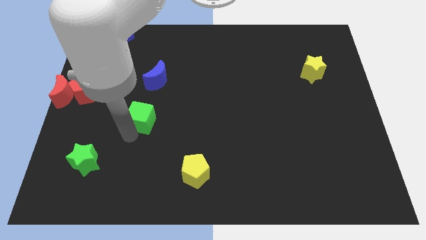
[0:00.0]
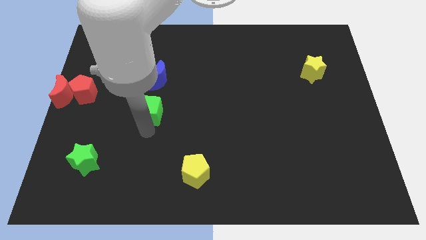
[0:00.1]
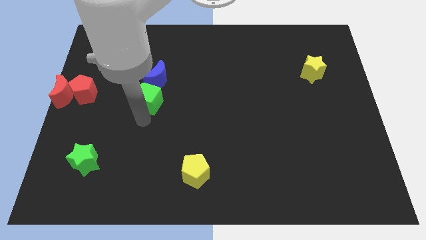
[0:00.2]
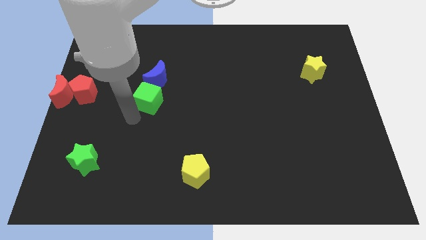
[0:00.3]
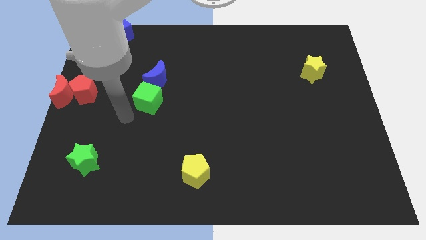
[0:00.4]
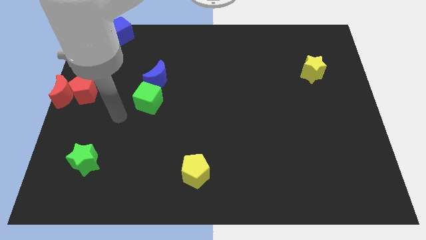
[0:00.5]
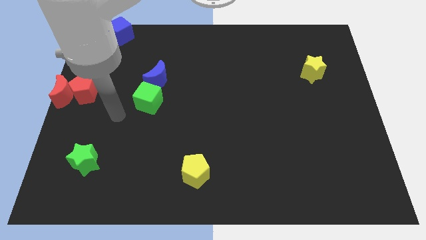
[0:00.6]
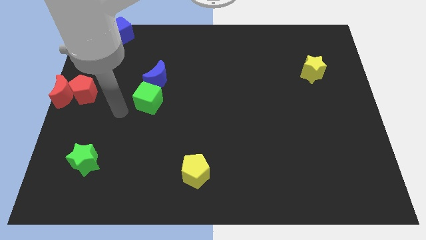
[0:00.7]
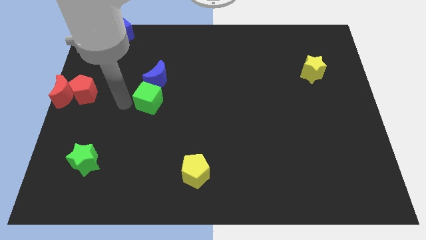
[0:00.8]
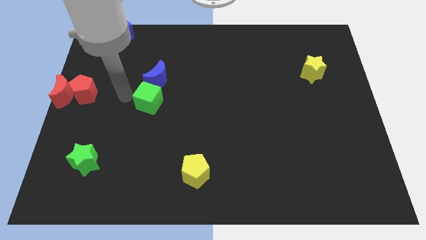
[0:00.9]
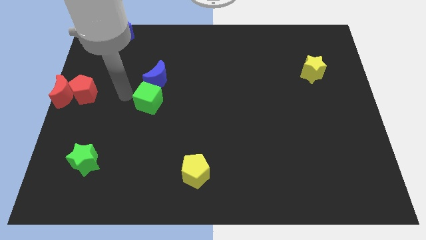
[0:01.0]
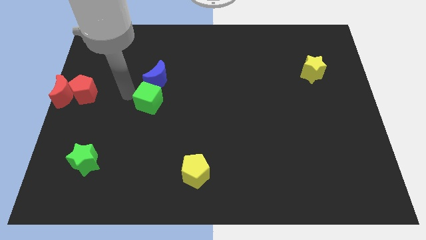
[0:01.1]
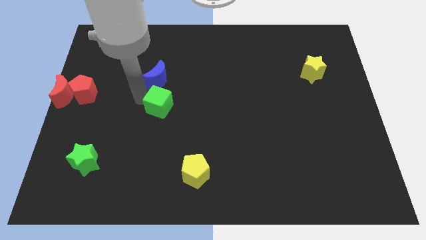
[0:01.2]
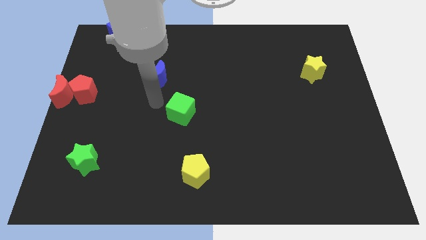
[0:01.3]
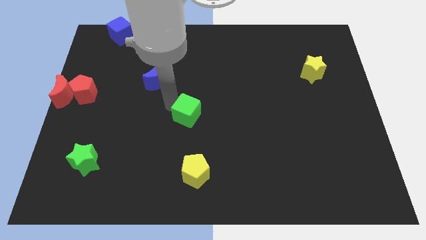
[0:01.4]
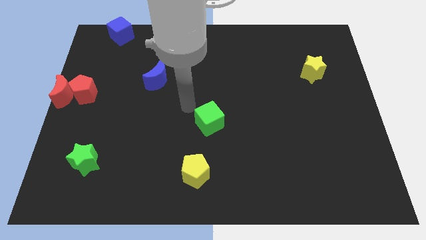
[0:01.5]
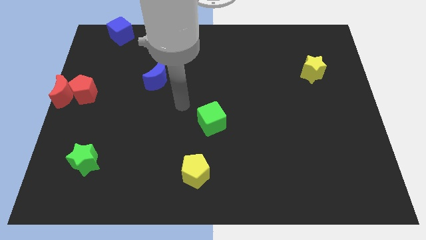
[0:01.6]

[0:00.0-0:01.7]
place the green block below the blue moon

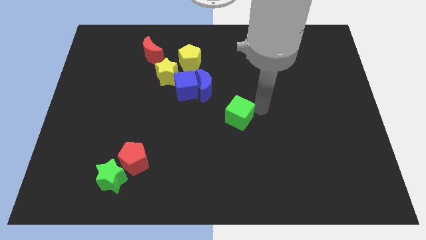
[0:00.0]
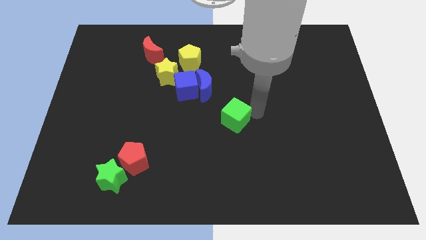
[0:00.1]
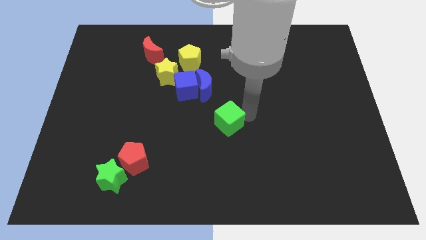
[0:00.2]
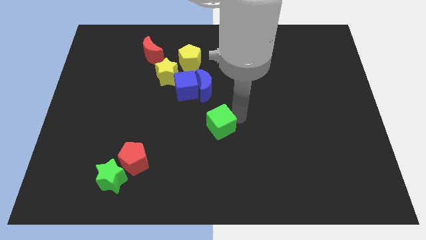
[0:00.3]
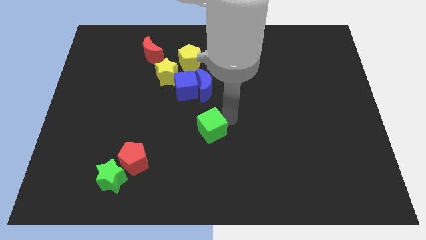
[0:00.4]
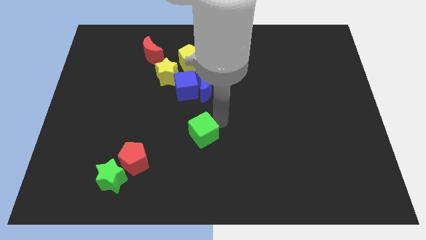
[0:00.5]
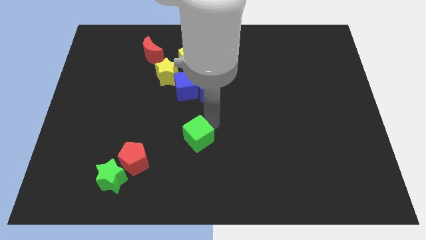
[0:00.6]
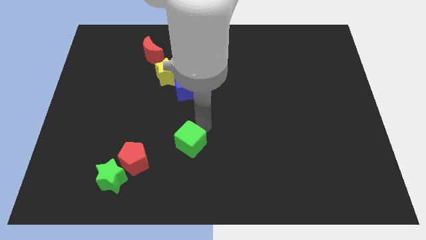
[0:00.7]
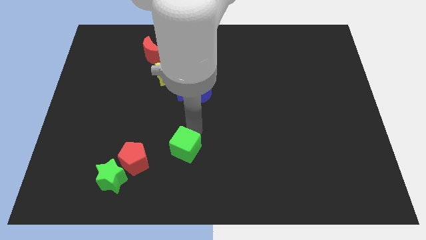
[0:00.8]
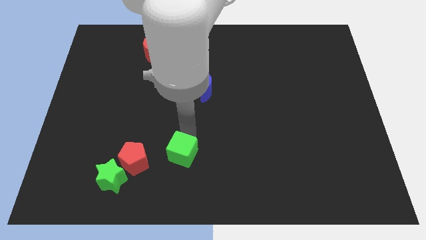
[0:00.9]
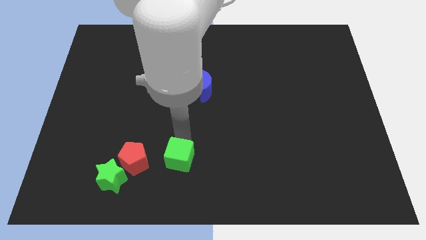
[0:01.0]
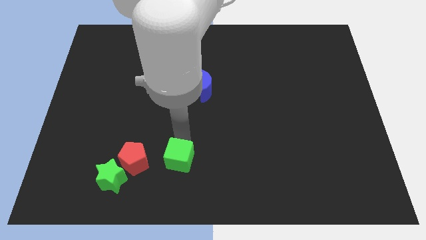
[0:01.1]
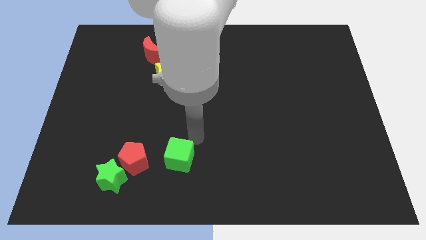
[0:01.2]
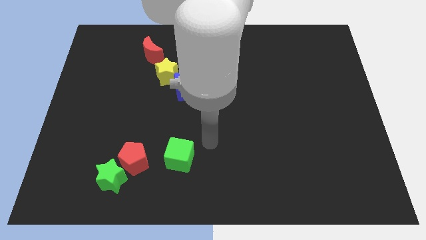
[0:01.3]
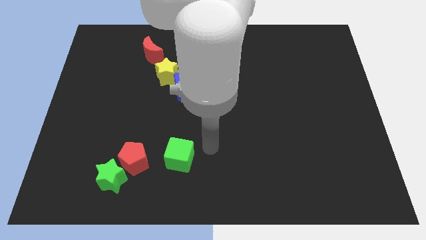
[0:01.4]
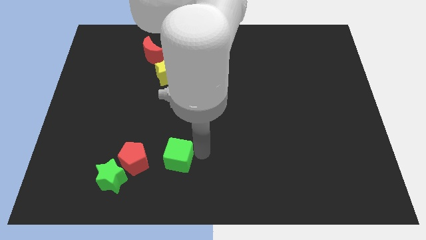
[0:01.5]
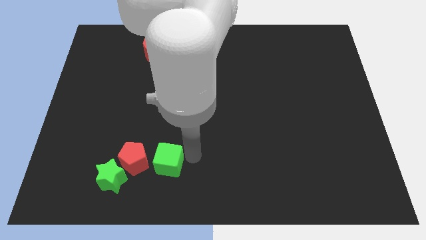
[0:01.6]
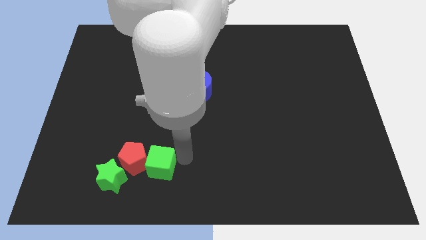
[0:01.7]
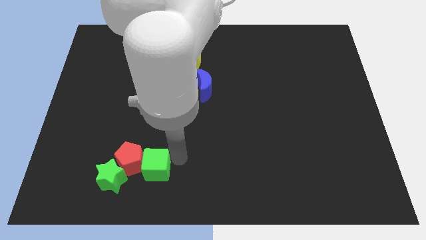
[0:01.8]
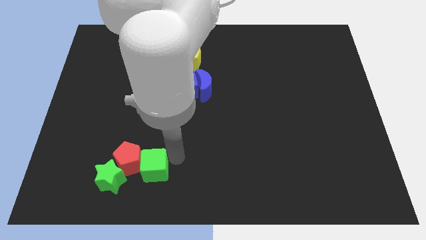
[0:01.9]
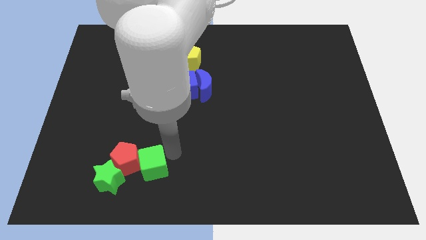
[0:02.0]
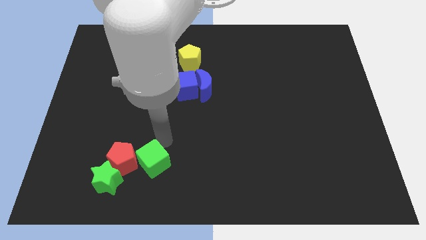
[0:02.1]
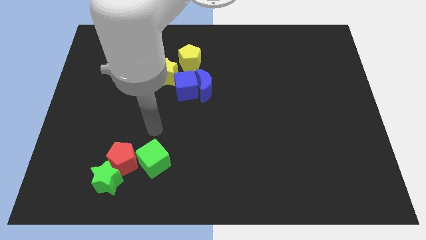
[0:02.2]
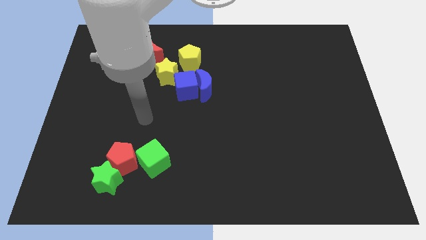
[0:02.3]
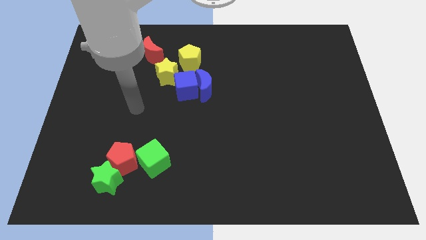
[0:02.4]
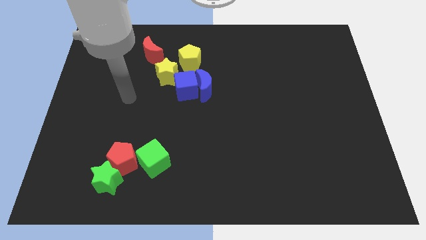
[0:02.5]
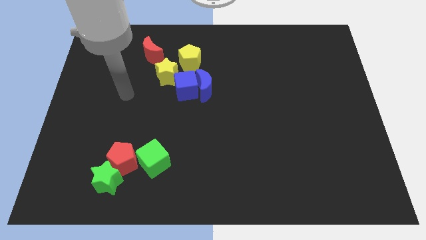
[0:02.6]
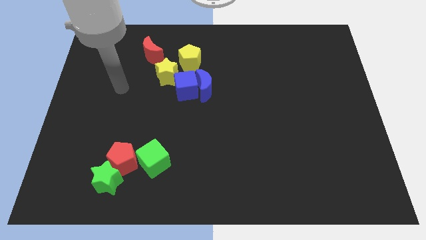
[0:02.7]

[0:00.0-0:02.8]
push the green cube into the red pentagon

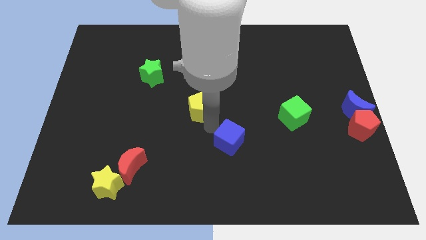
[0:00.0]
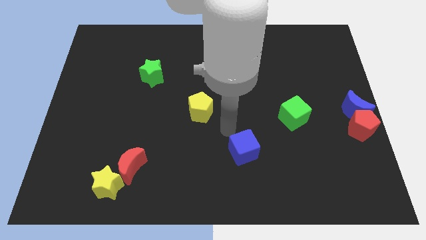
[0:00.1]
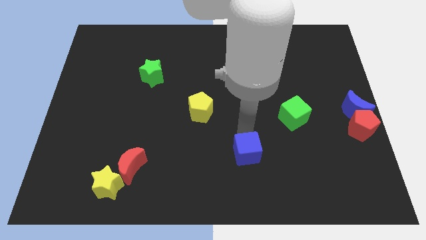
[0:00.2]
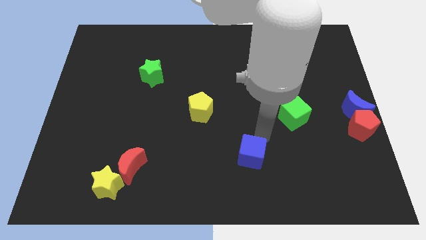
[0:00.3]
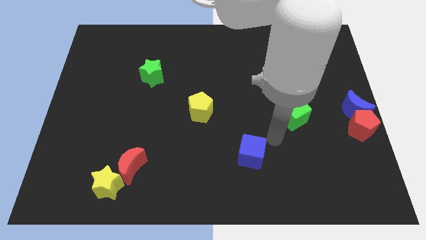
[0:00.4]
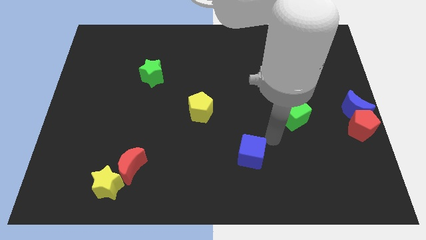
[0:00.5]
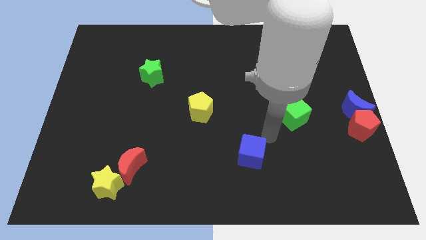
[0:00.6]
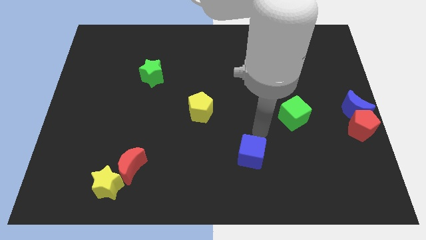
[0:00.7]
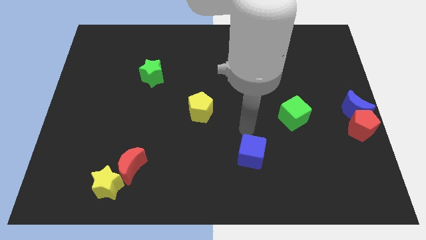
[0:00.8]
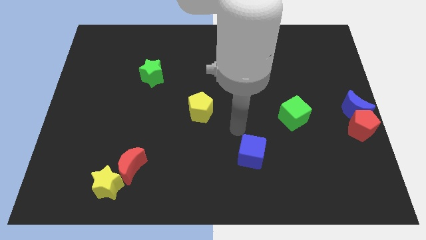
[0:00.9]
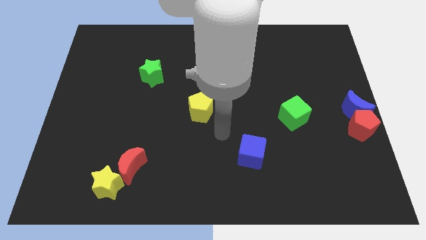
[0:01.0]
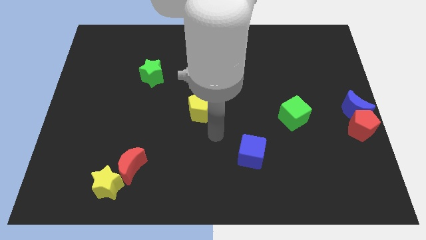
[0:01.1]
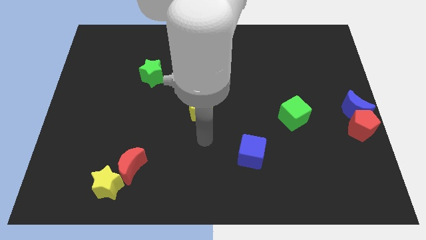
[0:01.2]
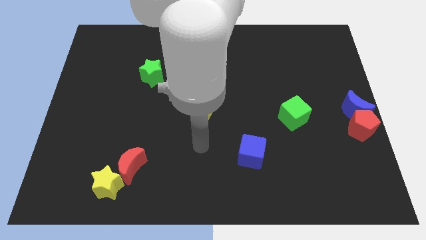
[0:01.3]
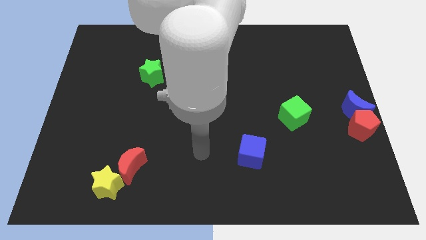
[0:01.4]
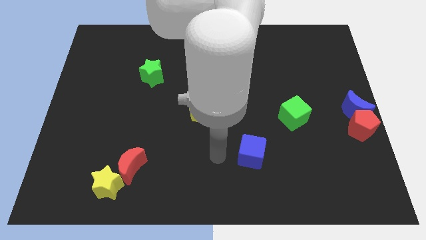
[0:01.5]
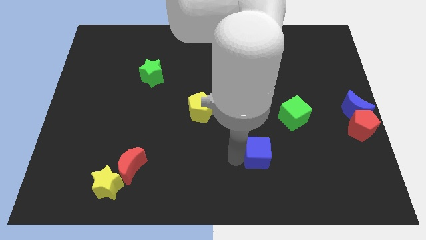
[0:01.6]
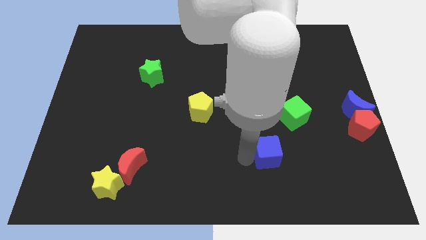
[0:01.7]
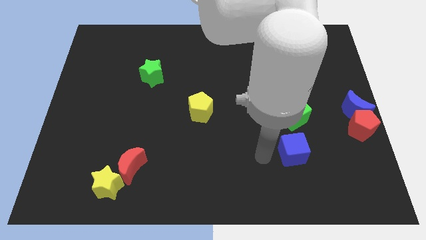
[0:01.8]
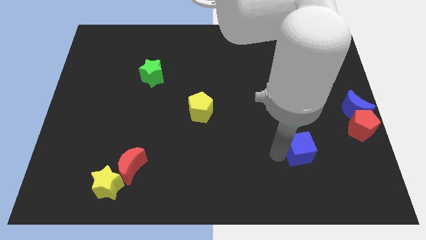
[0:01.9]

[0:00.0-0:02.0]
place the blue cube under blue cube

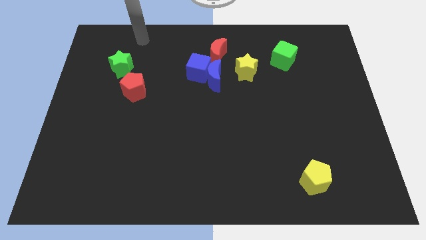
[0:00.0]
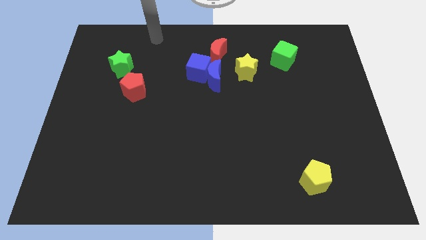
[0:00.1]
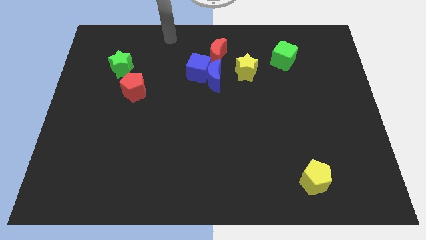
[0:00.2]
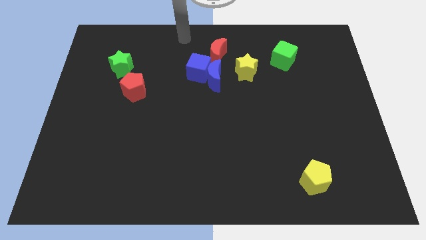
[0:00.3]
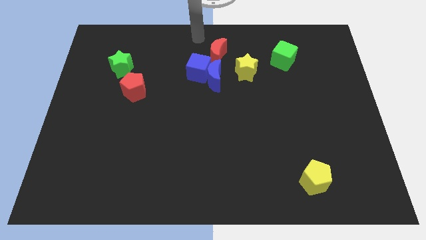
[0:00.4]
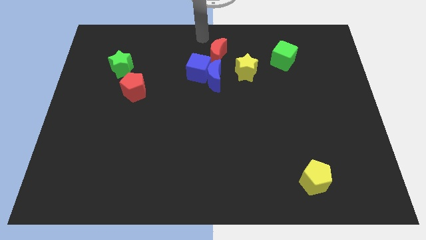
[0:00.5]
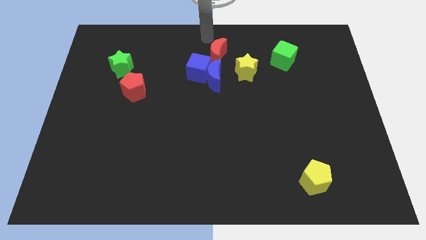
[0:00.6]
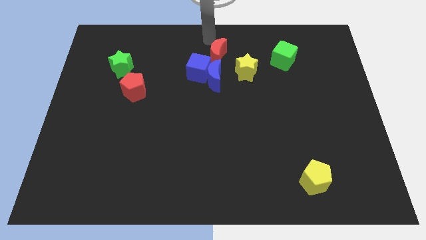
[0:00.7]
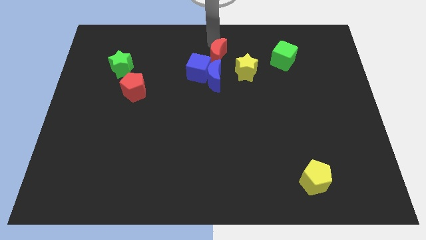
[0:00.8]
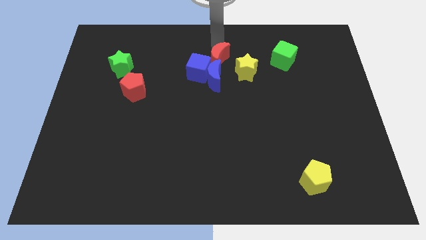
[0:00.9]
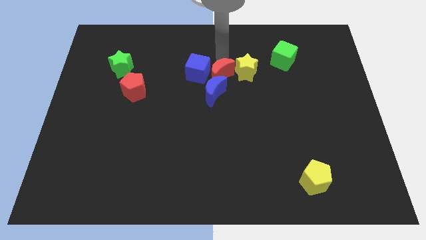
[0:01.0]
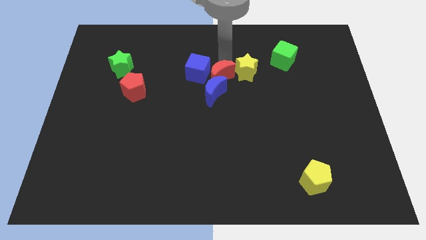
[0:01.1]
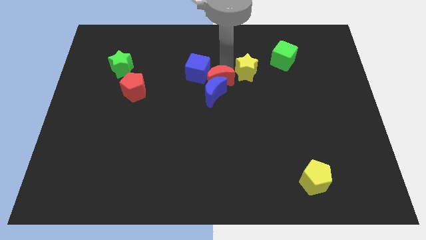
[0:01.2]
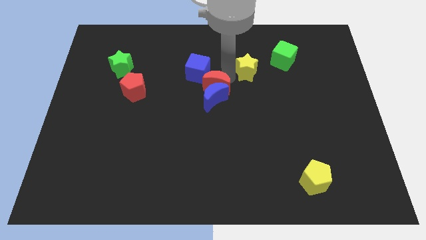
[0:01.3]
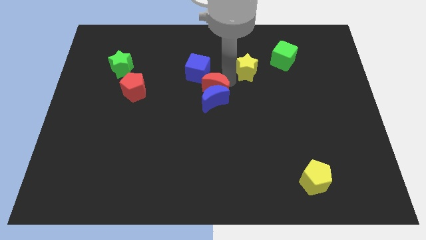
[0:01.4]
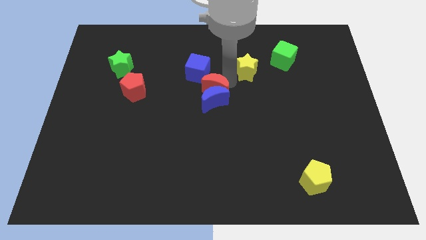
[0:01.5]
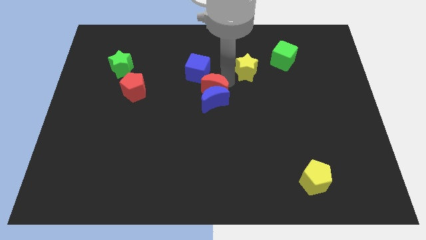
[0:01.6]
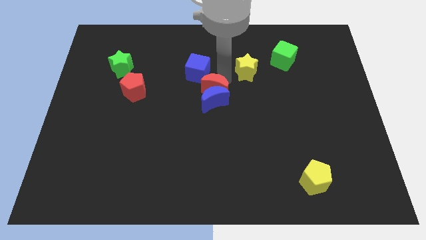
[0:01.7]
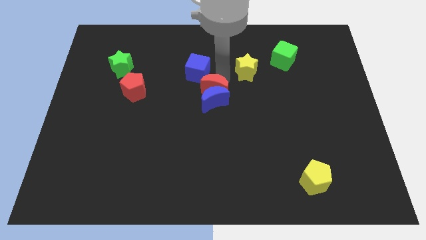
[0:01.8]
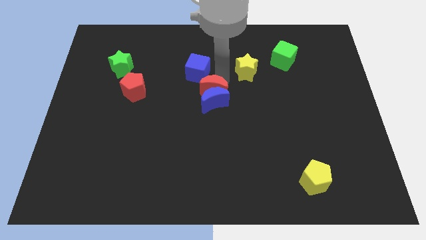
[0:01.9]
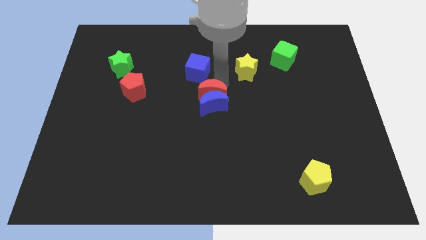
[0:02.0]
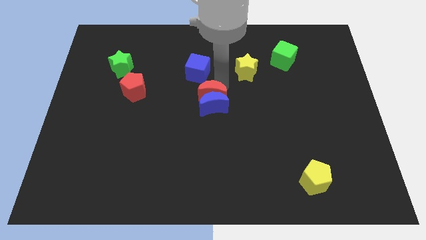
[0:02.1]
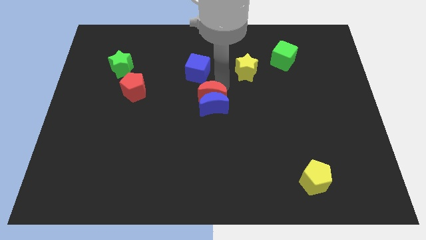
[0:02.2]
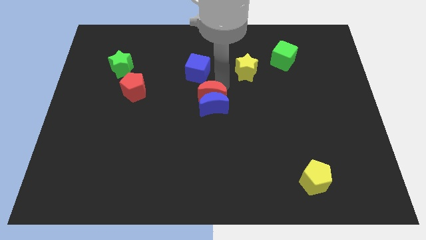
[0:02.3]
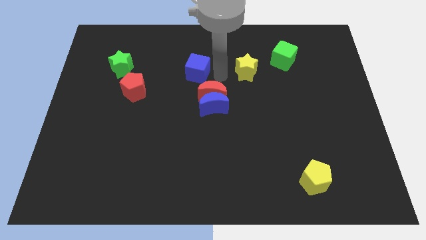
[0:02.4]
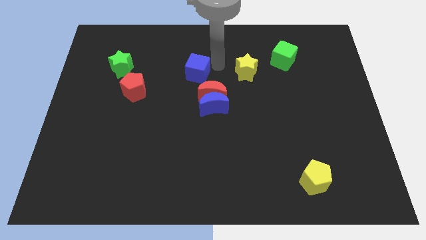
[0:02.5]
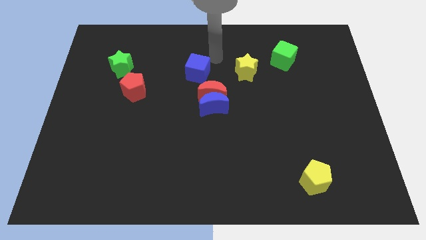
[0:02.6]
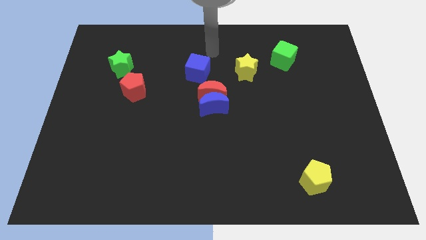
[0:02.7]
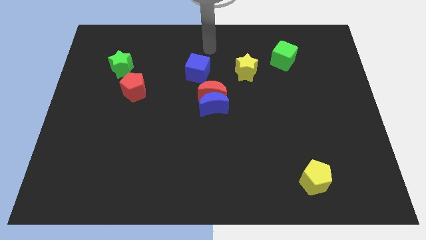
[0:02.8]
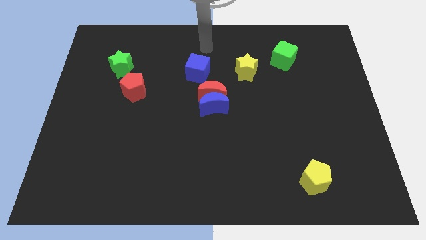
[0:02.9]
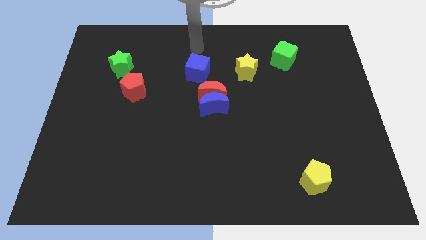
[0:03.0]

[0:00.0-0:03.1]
move red crescent along with blue crescent
